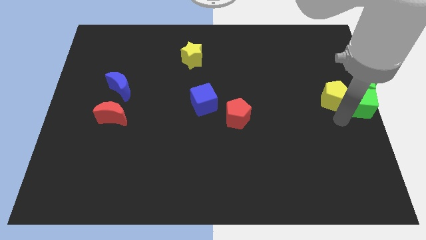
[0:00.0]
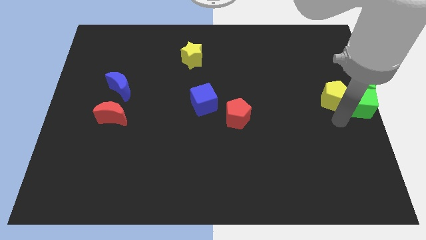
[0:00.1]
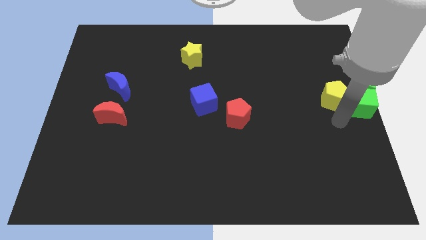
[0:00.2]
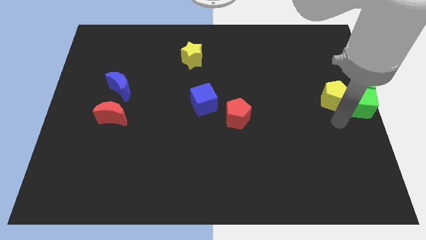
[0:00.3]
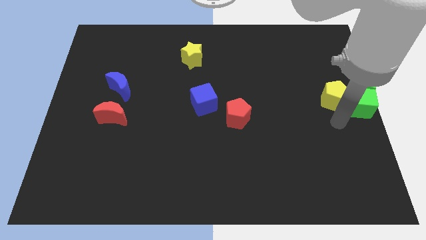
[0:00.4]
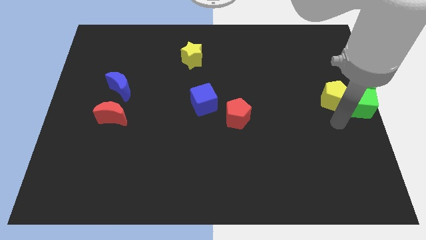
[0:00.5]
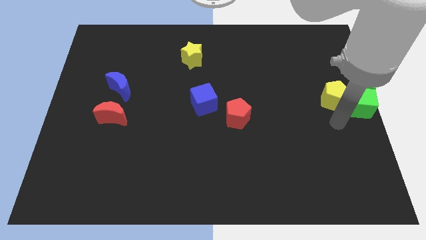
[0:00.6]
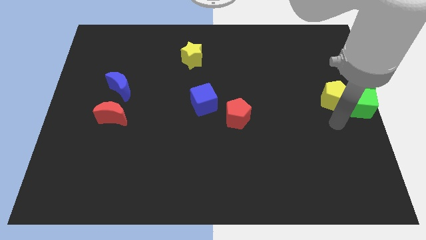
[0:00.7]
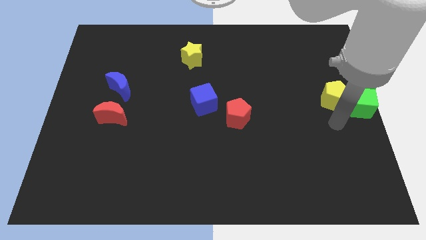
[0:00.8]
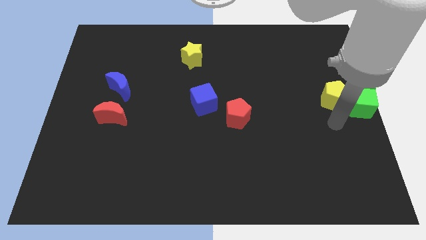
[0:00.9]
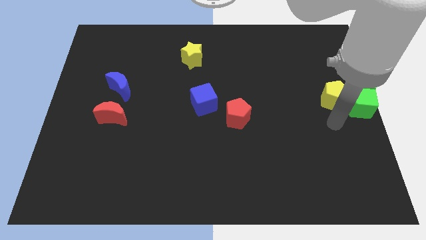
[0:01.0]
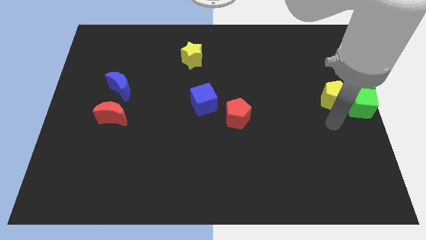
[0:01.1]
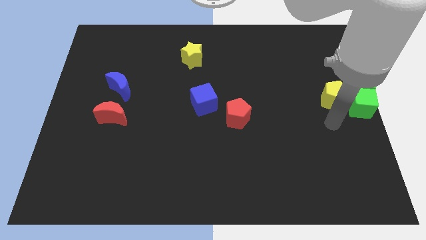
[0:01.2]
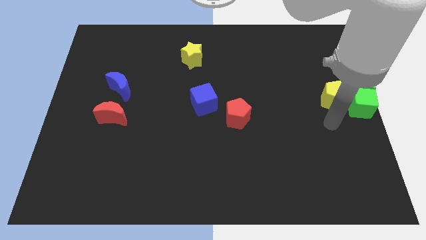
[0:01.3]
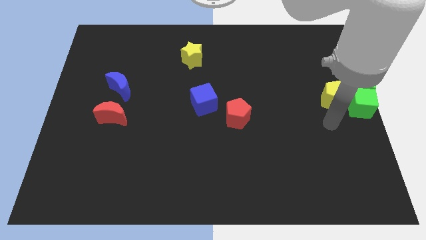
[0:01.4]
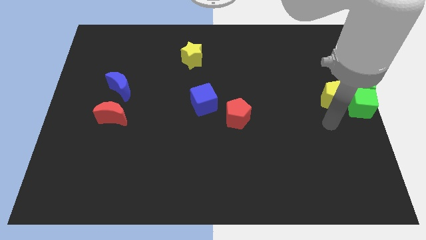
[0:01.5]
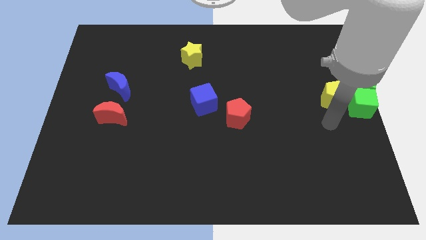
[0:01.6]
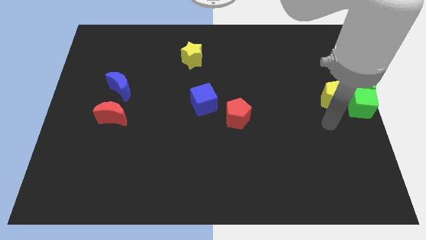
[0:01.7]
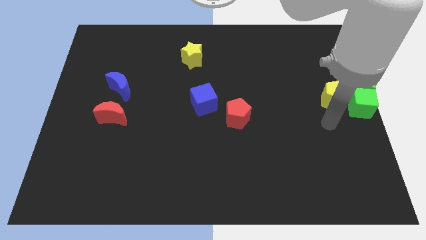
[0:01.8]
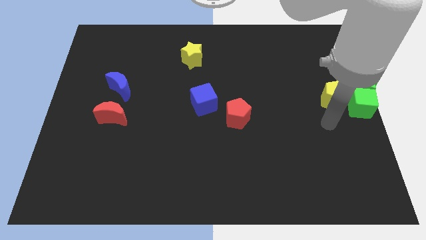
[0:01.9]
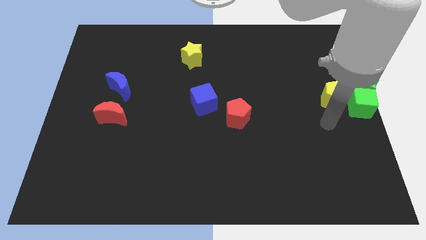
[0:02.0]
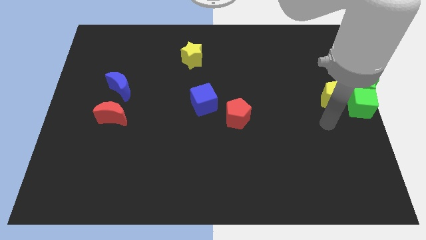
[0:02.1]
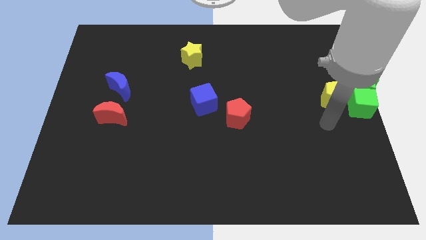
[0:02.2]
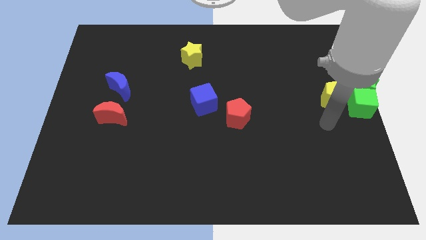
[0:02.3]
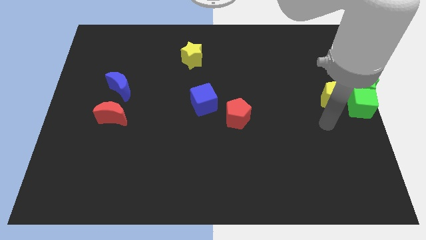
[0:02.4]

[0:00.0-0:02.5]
point your arm at the bottom of yellow pentagon

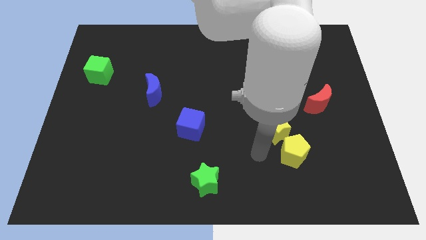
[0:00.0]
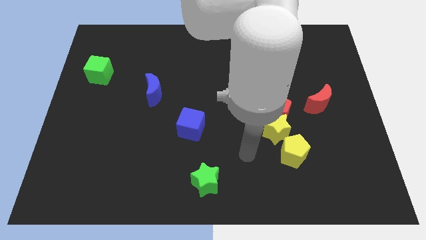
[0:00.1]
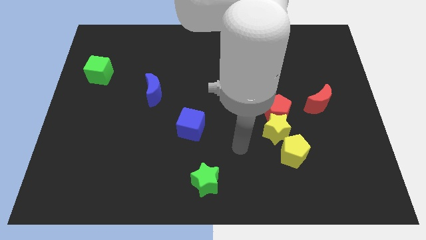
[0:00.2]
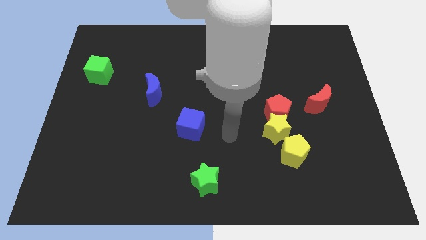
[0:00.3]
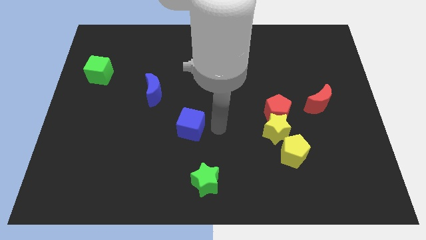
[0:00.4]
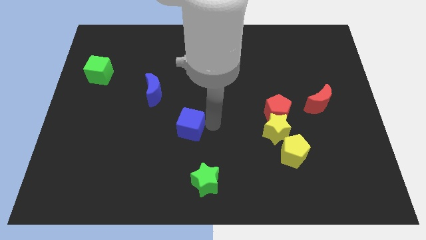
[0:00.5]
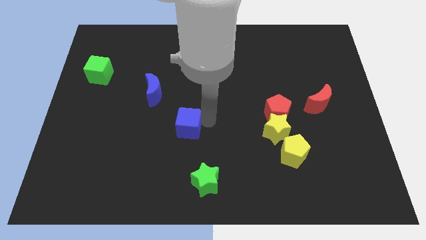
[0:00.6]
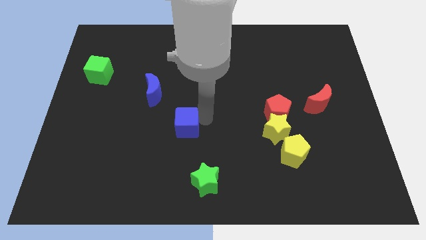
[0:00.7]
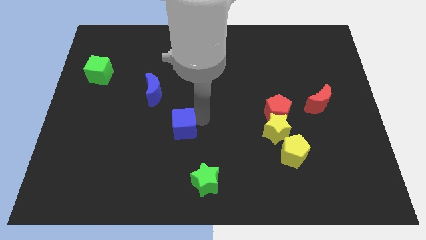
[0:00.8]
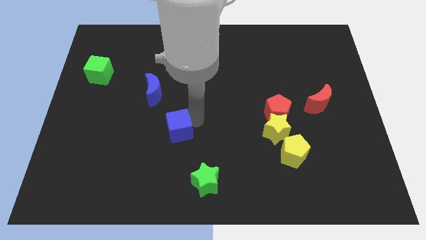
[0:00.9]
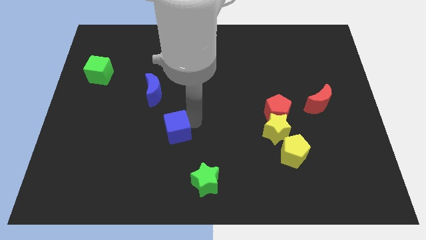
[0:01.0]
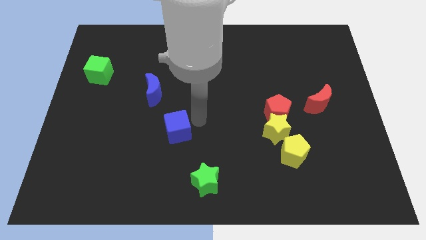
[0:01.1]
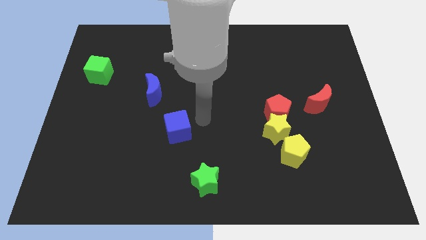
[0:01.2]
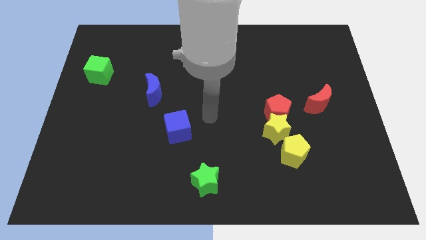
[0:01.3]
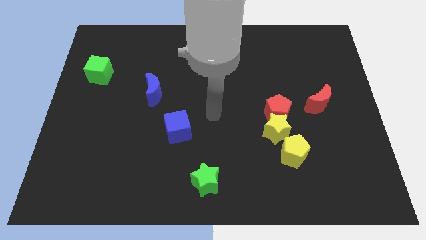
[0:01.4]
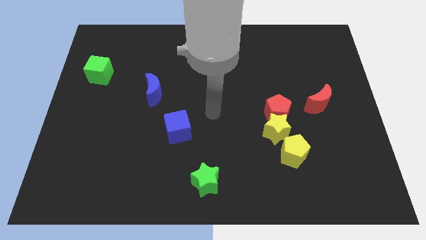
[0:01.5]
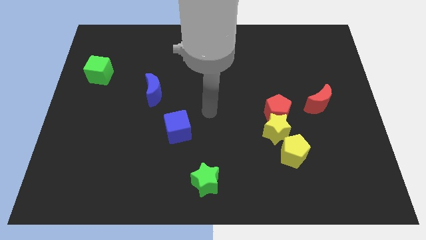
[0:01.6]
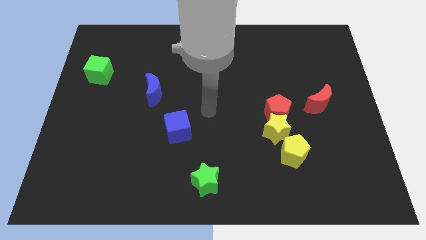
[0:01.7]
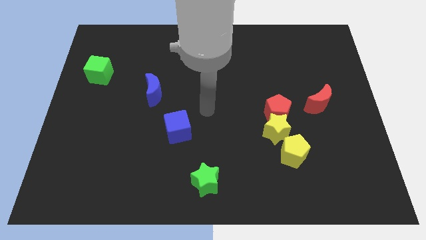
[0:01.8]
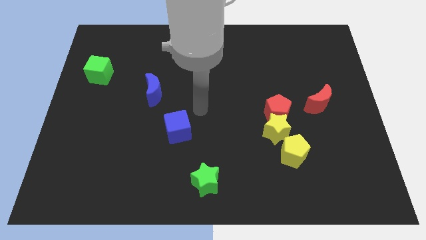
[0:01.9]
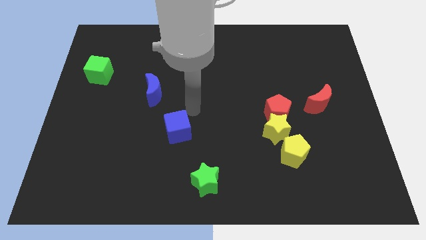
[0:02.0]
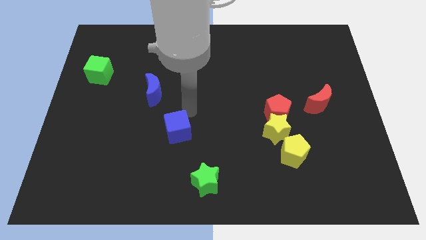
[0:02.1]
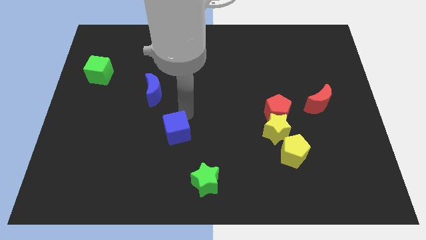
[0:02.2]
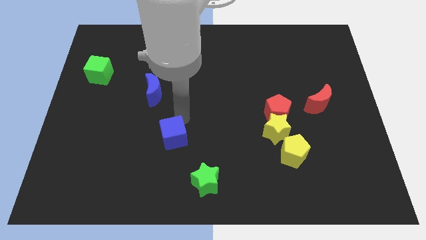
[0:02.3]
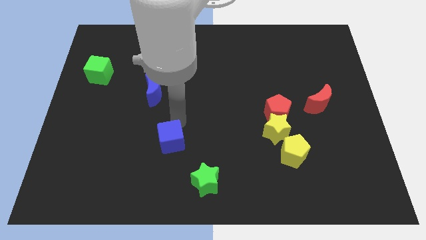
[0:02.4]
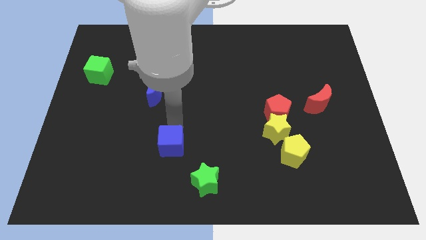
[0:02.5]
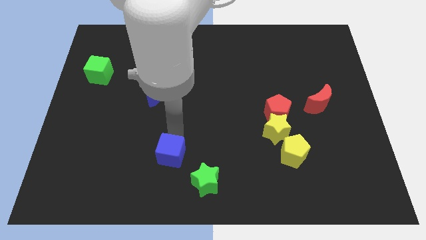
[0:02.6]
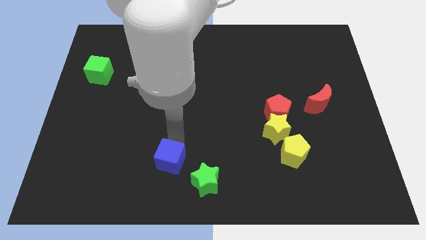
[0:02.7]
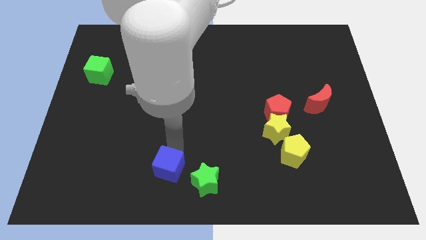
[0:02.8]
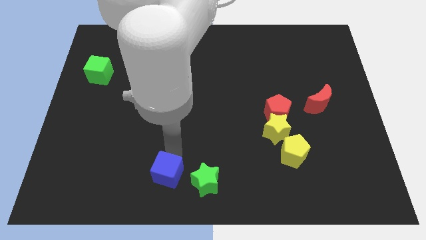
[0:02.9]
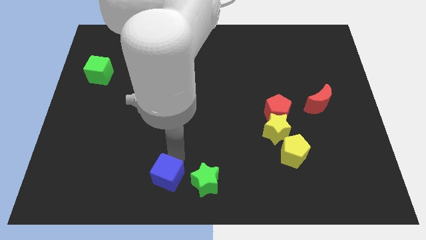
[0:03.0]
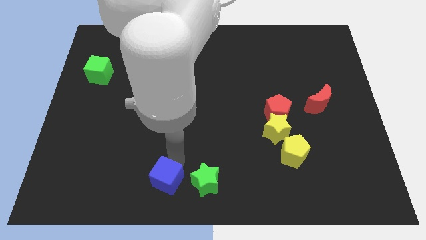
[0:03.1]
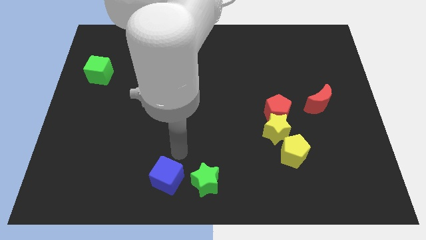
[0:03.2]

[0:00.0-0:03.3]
place the blue cube to the top left side of green star

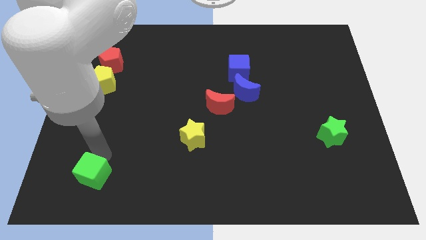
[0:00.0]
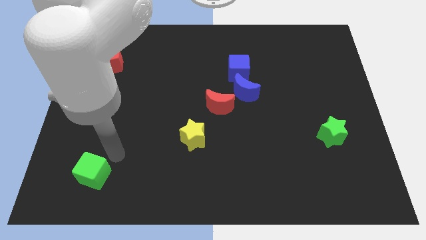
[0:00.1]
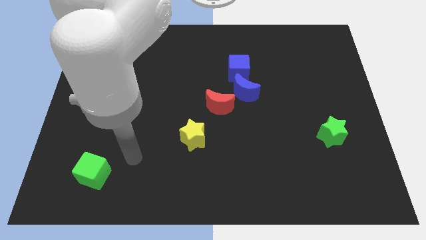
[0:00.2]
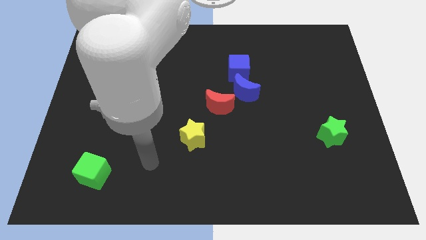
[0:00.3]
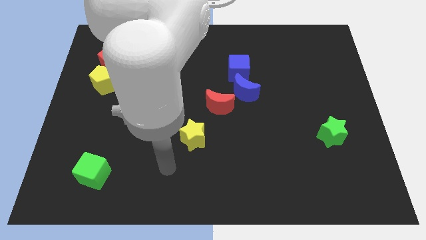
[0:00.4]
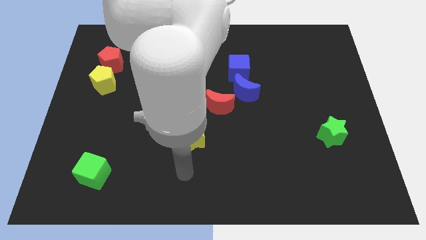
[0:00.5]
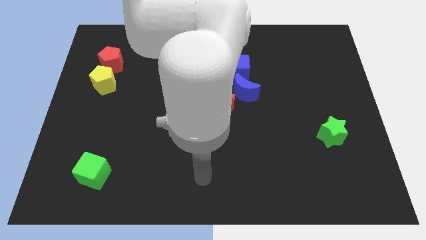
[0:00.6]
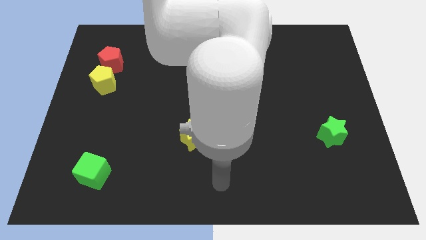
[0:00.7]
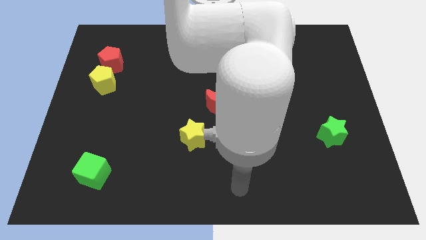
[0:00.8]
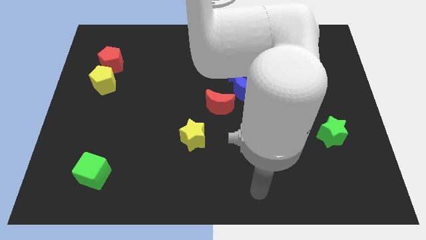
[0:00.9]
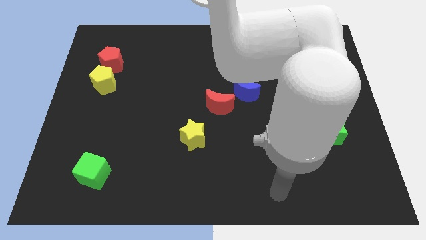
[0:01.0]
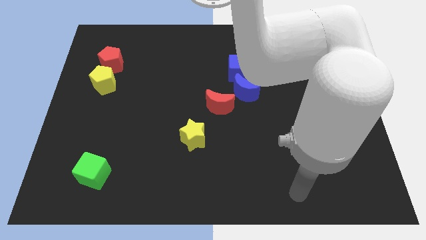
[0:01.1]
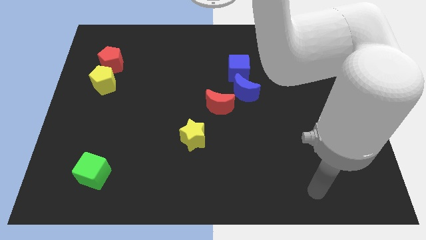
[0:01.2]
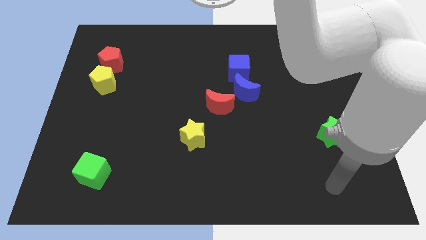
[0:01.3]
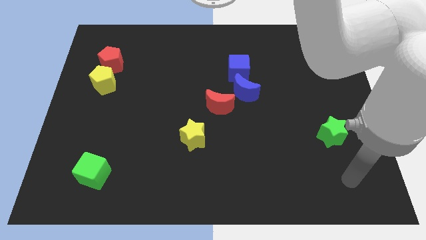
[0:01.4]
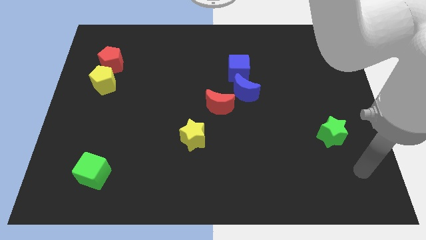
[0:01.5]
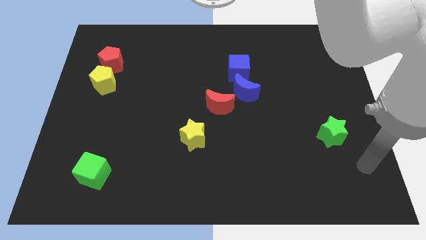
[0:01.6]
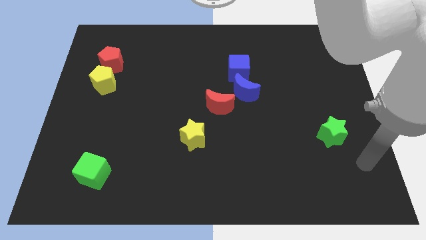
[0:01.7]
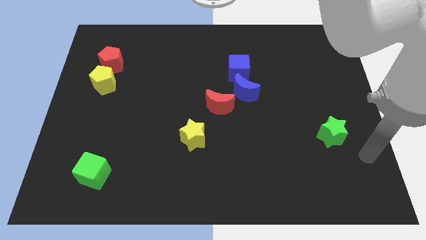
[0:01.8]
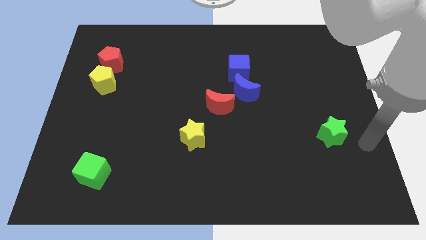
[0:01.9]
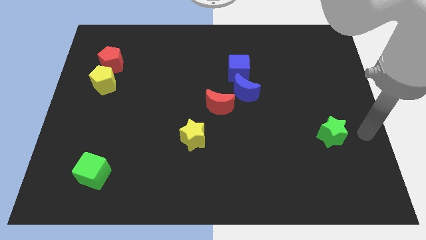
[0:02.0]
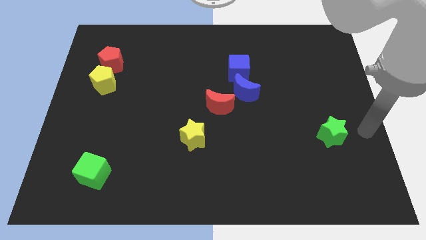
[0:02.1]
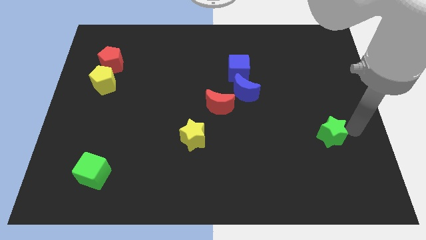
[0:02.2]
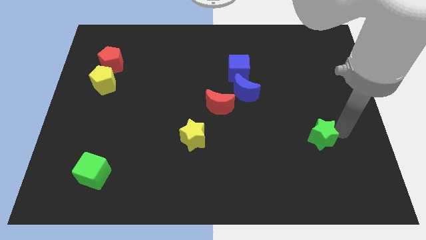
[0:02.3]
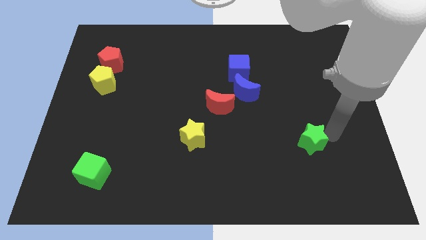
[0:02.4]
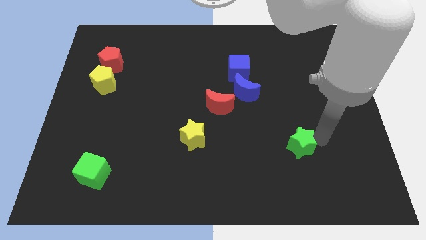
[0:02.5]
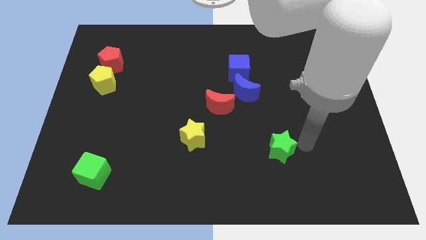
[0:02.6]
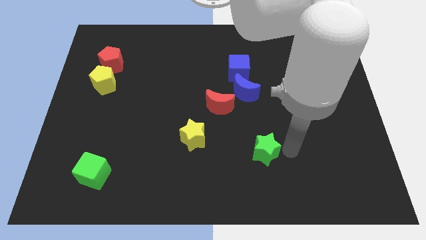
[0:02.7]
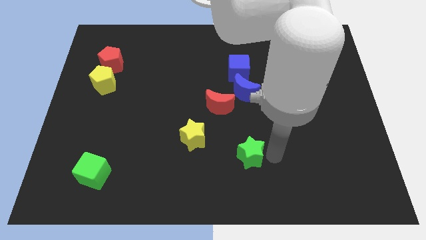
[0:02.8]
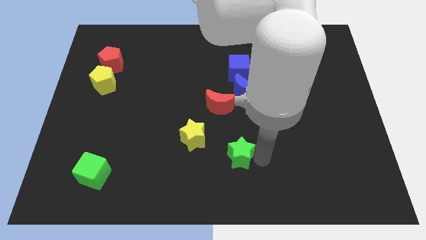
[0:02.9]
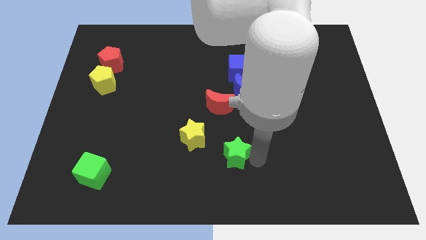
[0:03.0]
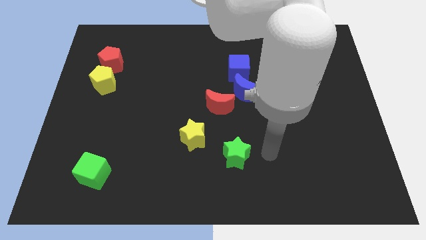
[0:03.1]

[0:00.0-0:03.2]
slide green star towards yellow star
